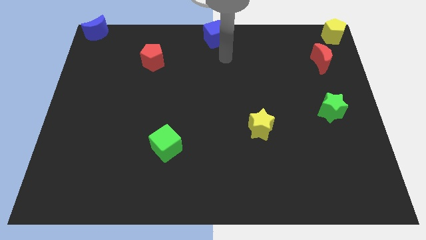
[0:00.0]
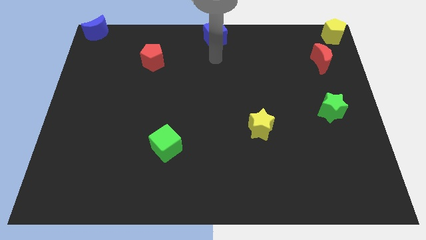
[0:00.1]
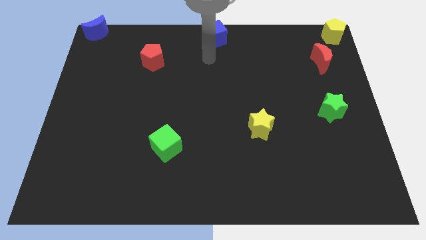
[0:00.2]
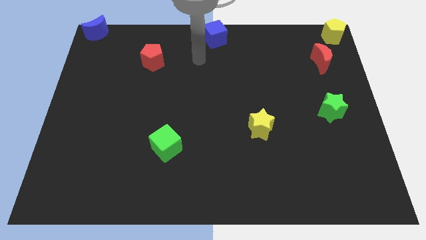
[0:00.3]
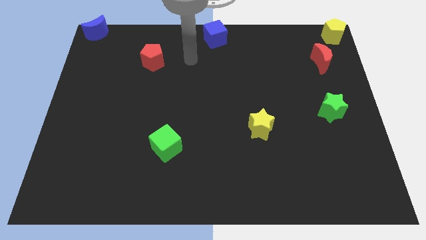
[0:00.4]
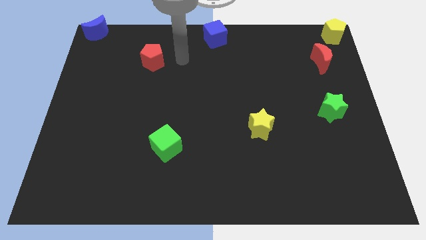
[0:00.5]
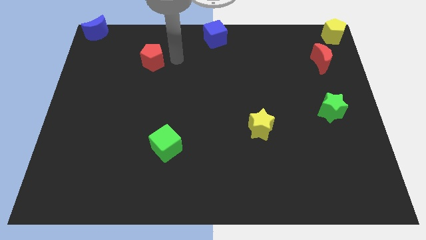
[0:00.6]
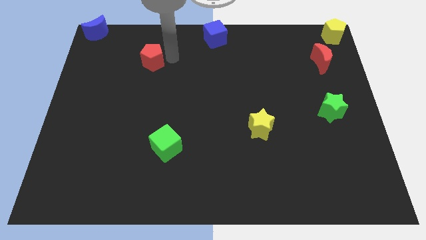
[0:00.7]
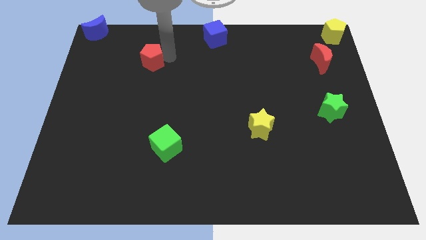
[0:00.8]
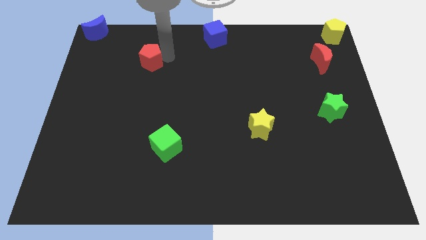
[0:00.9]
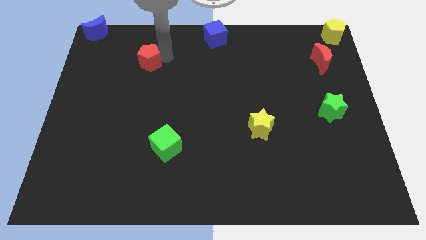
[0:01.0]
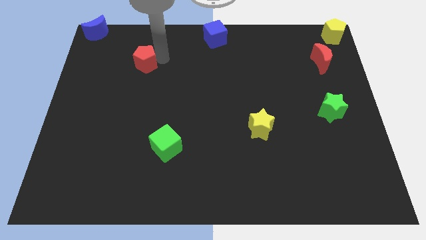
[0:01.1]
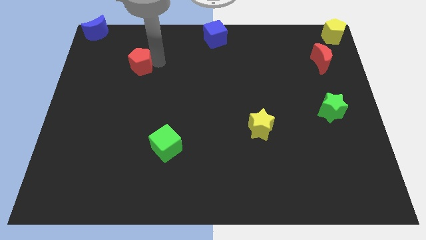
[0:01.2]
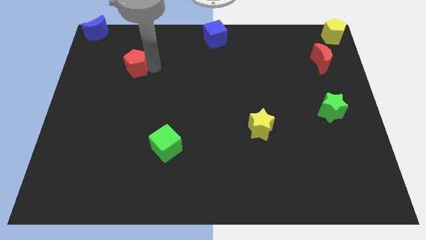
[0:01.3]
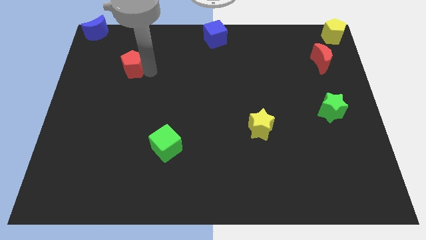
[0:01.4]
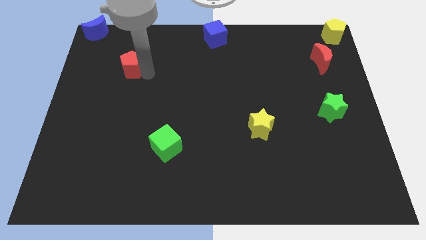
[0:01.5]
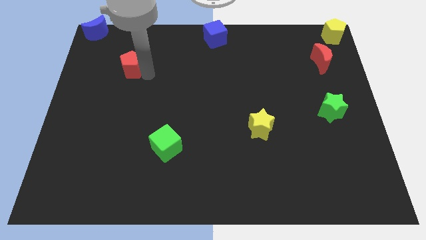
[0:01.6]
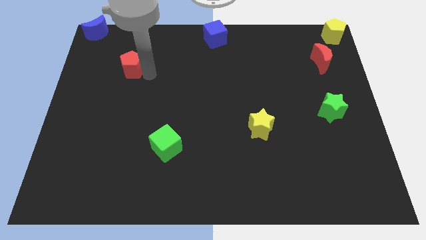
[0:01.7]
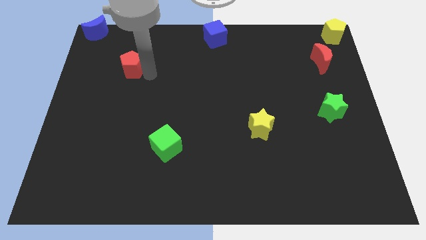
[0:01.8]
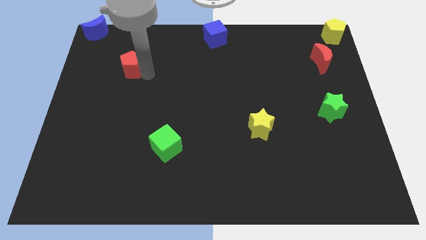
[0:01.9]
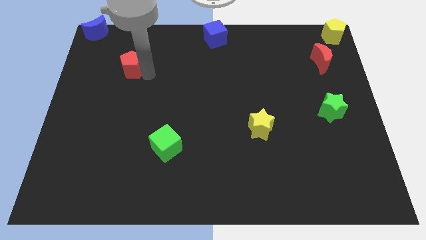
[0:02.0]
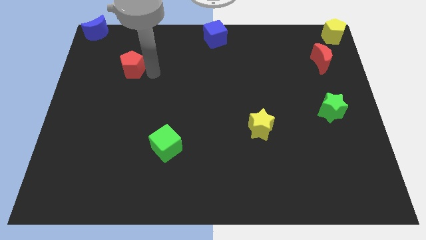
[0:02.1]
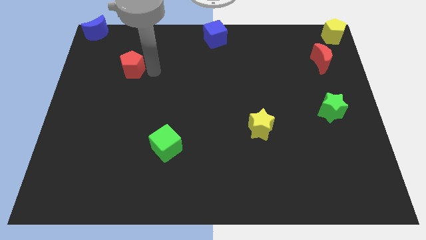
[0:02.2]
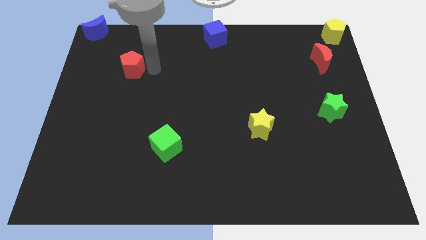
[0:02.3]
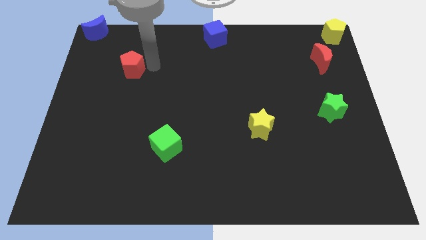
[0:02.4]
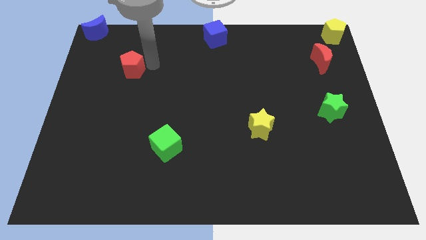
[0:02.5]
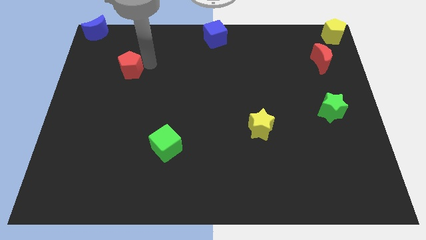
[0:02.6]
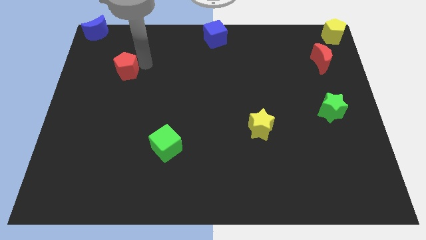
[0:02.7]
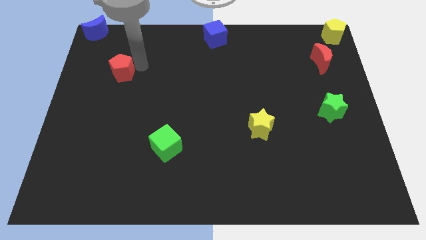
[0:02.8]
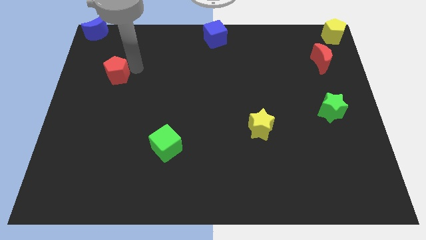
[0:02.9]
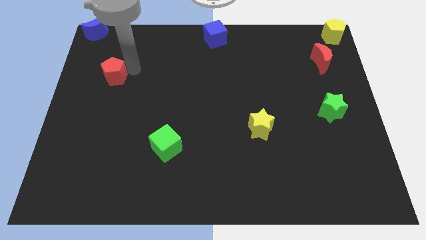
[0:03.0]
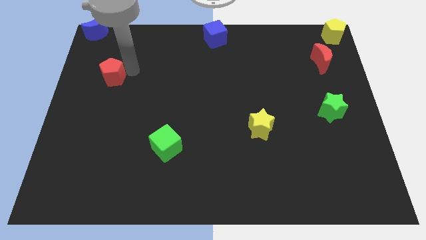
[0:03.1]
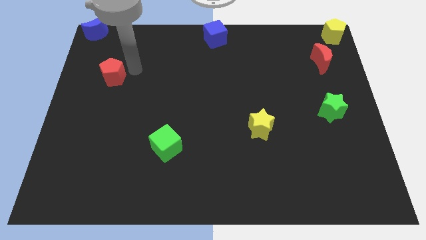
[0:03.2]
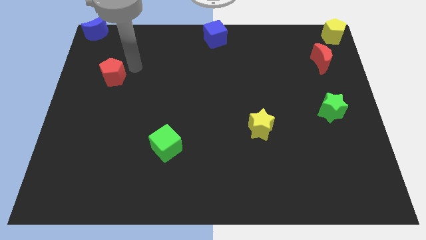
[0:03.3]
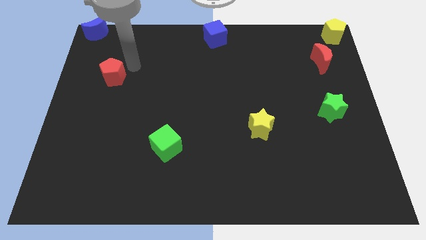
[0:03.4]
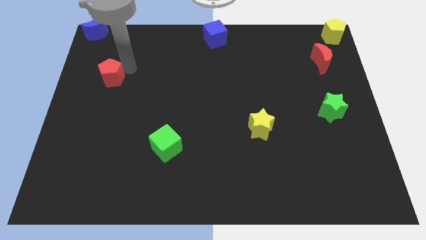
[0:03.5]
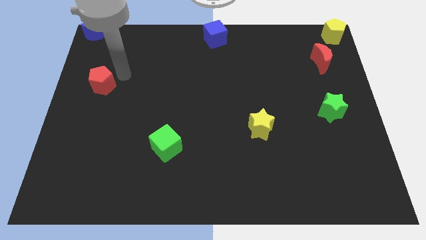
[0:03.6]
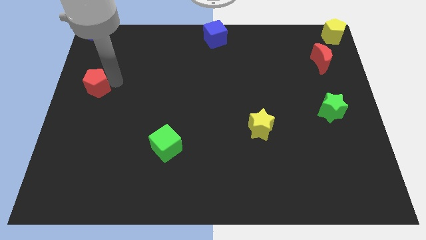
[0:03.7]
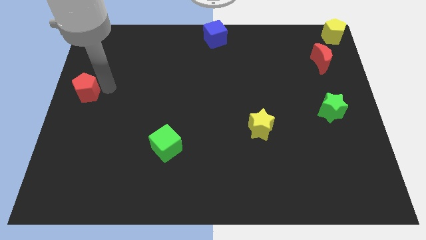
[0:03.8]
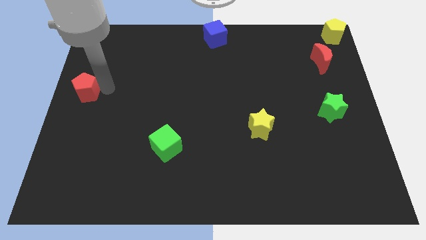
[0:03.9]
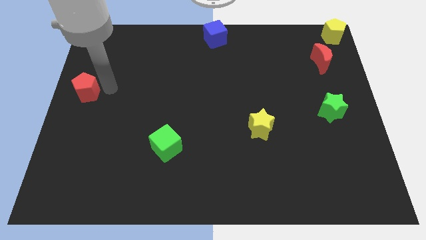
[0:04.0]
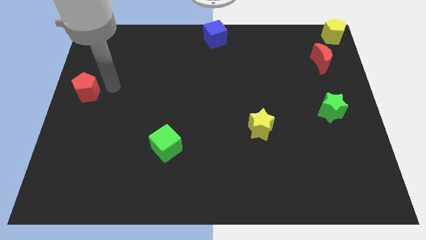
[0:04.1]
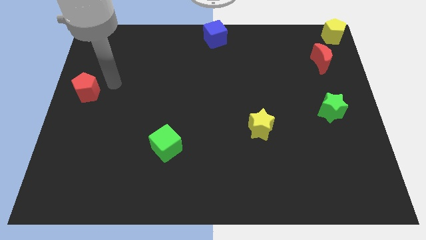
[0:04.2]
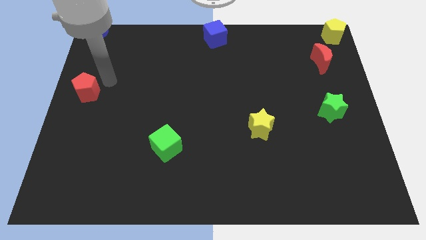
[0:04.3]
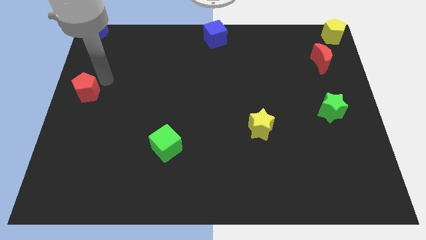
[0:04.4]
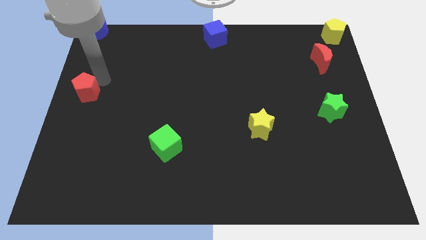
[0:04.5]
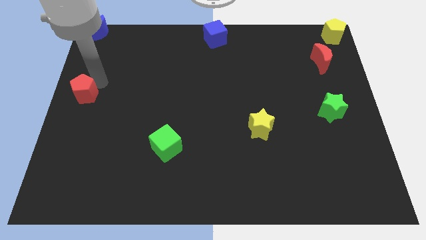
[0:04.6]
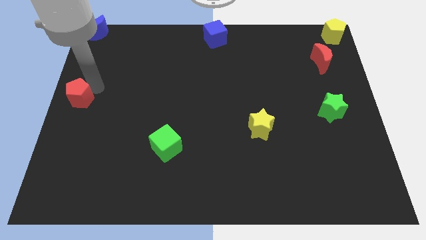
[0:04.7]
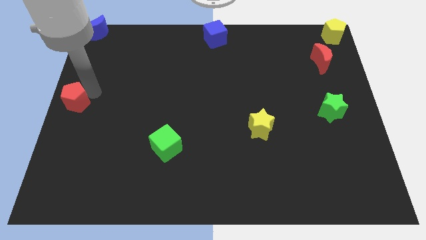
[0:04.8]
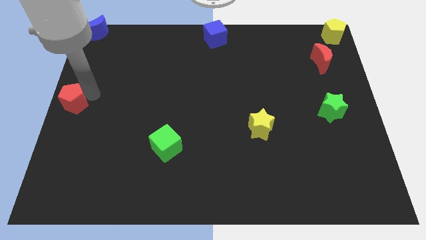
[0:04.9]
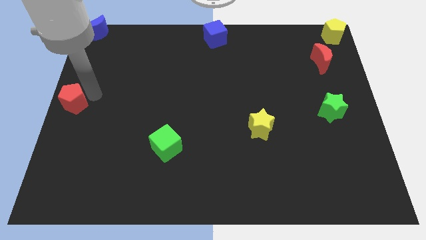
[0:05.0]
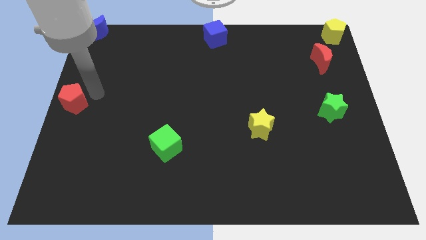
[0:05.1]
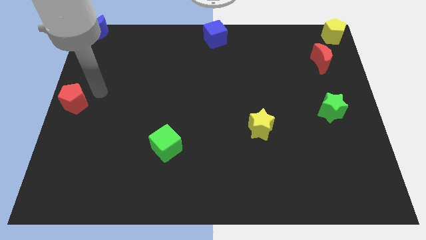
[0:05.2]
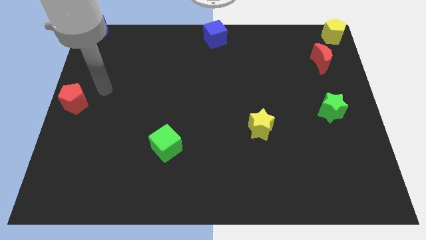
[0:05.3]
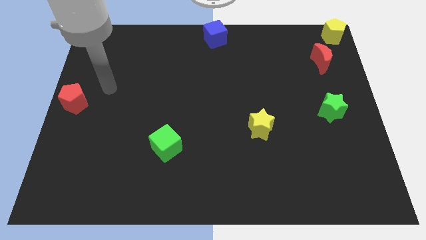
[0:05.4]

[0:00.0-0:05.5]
push the red pentagon at the left center of the board

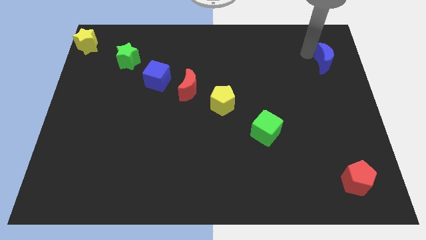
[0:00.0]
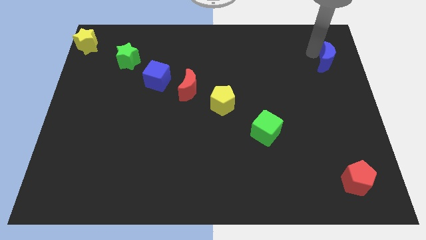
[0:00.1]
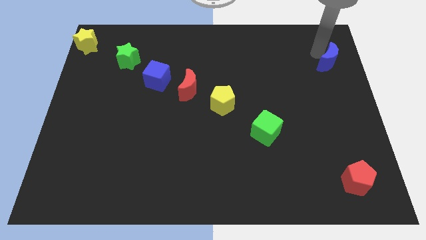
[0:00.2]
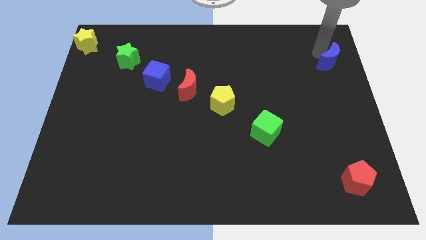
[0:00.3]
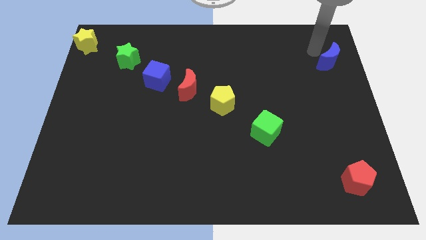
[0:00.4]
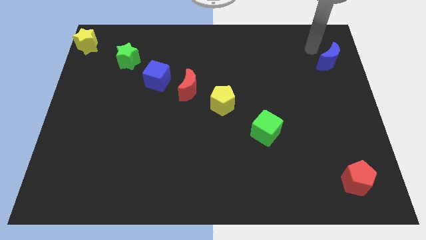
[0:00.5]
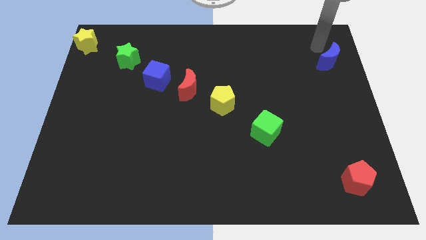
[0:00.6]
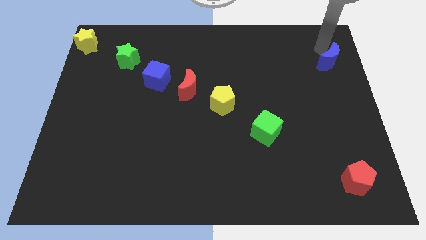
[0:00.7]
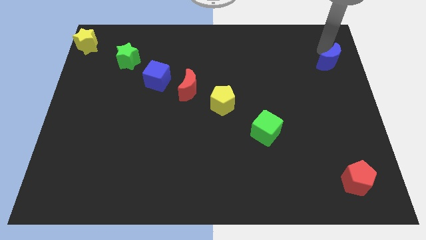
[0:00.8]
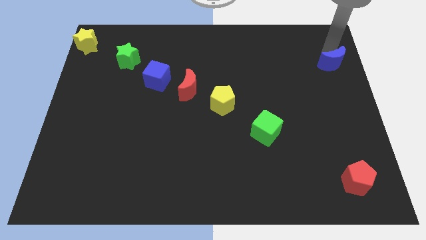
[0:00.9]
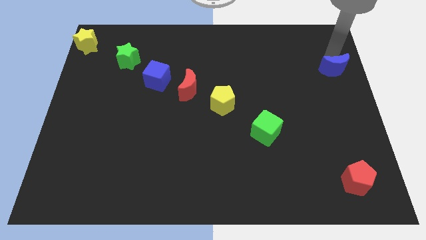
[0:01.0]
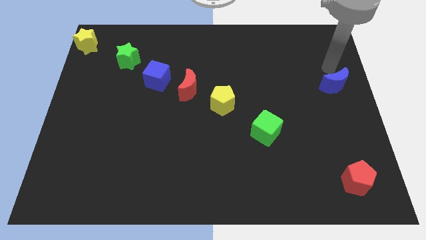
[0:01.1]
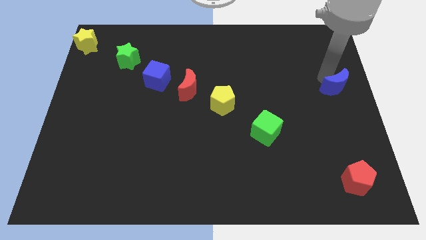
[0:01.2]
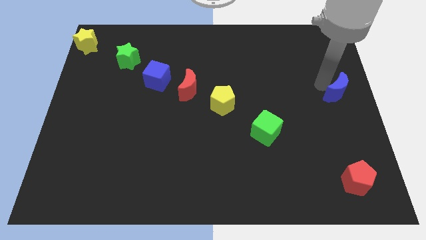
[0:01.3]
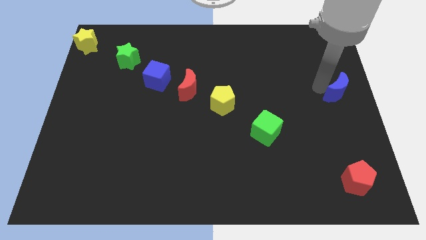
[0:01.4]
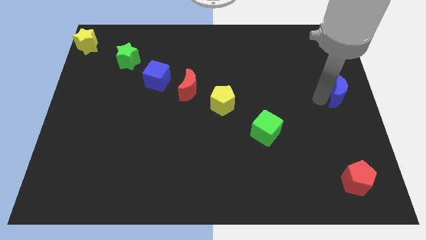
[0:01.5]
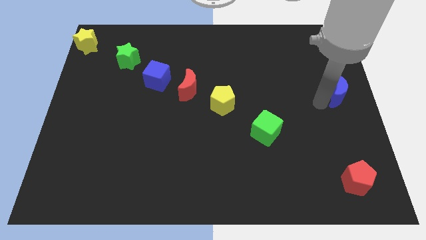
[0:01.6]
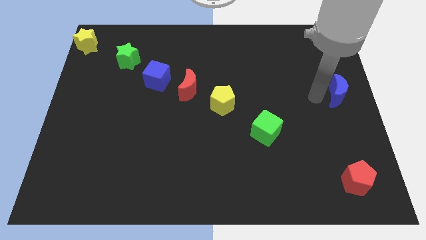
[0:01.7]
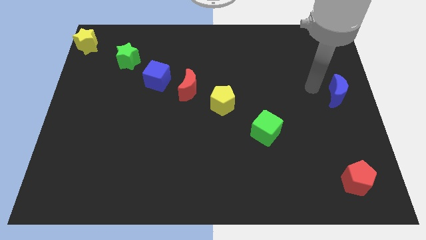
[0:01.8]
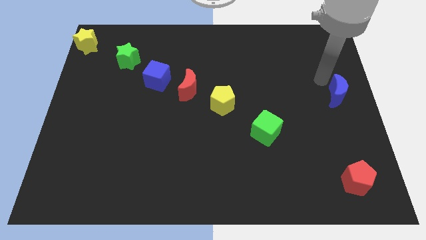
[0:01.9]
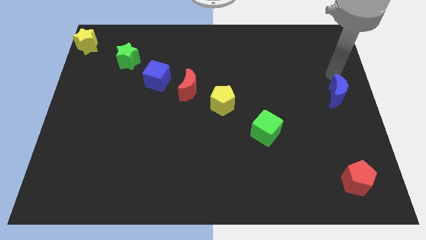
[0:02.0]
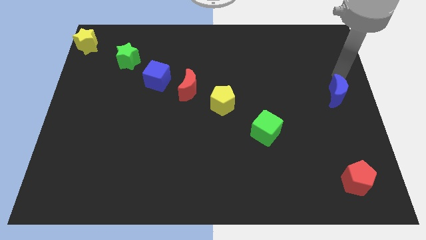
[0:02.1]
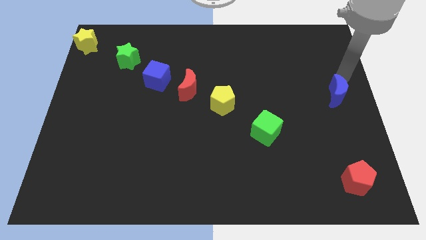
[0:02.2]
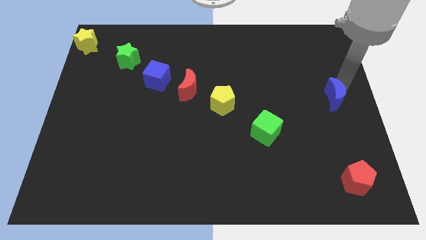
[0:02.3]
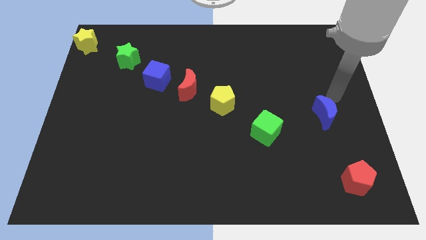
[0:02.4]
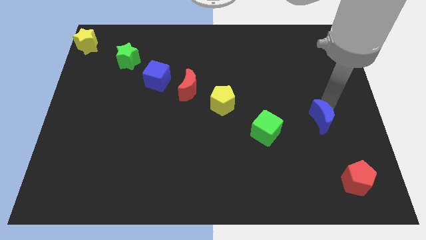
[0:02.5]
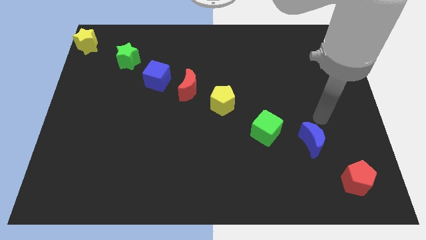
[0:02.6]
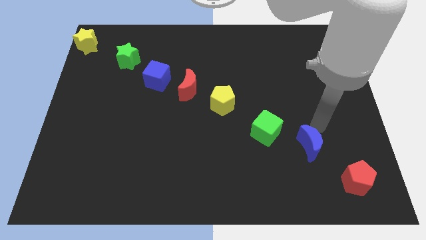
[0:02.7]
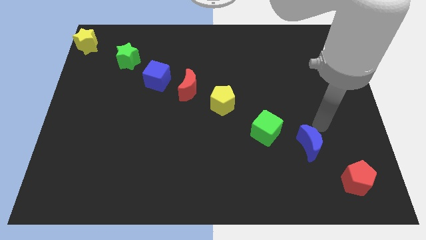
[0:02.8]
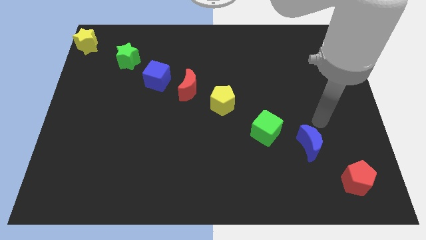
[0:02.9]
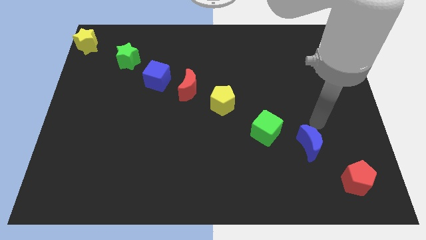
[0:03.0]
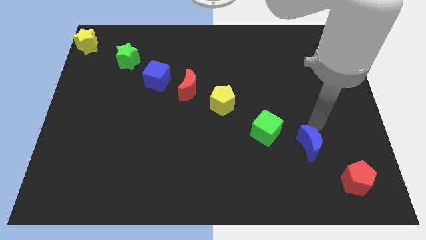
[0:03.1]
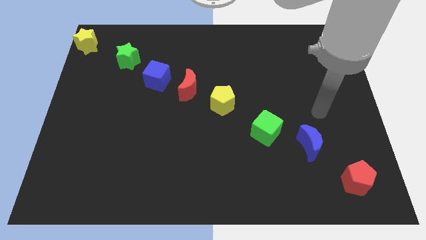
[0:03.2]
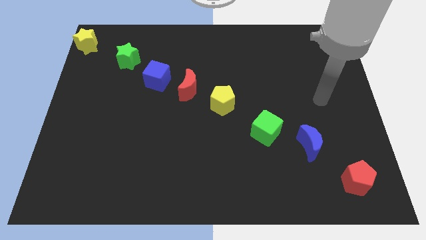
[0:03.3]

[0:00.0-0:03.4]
place the blue moon in between the green cube and the red pentagon
